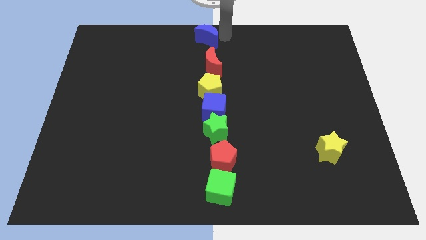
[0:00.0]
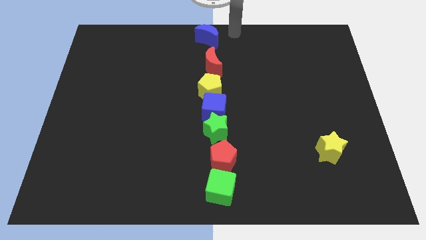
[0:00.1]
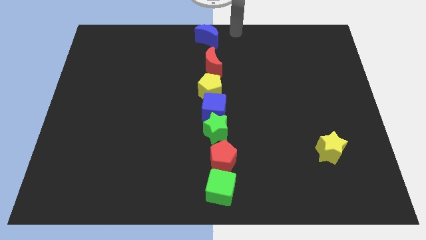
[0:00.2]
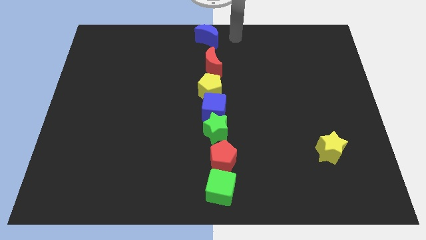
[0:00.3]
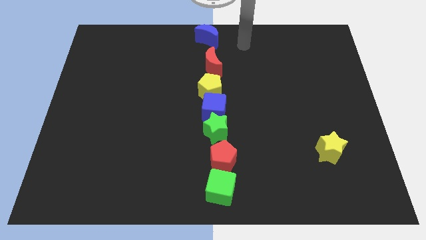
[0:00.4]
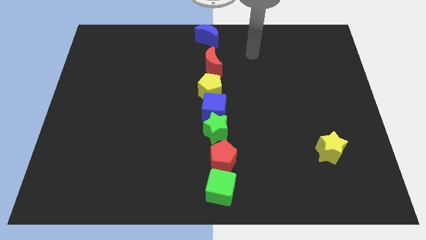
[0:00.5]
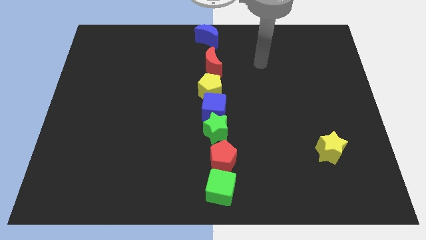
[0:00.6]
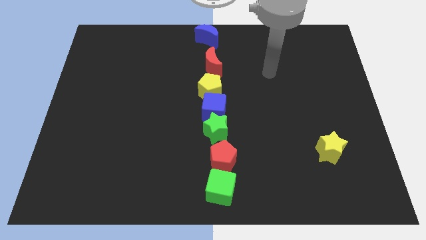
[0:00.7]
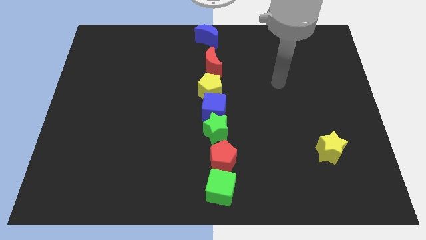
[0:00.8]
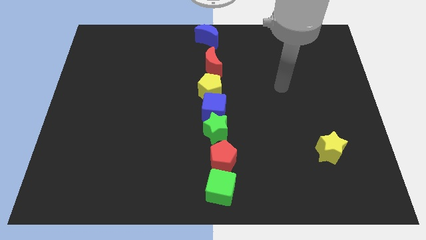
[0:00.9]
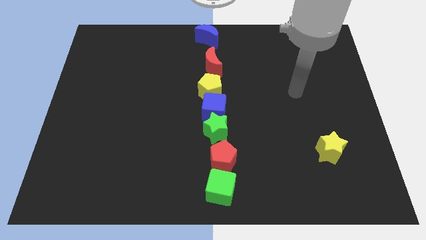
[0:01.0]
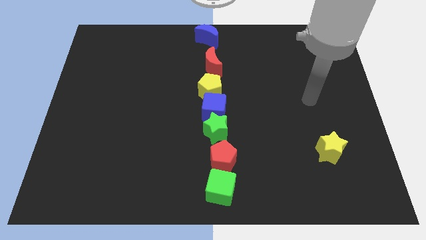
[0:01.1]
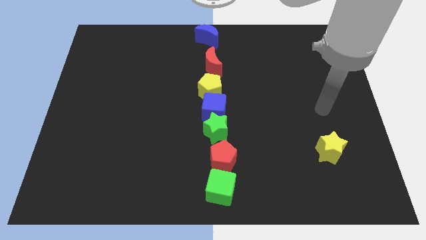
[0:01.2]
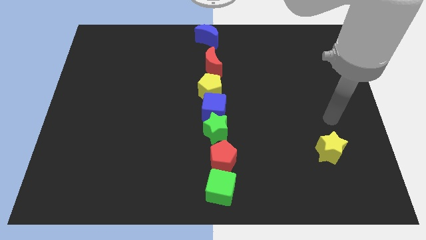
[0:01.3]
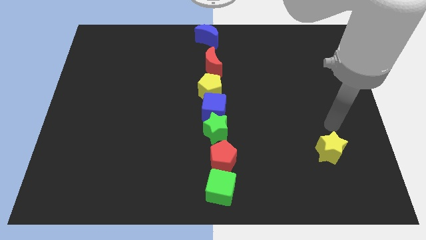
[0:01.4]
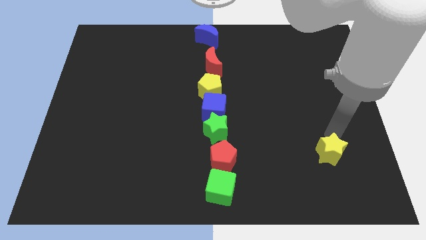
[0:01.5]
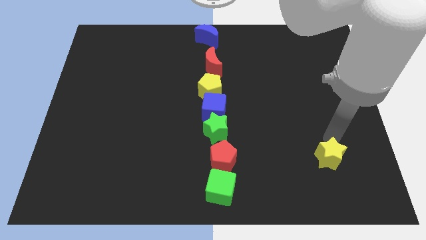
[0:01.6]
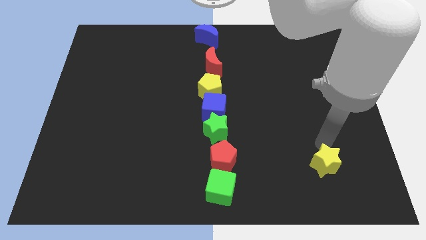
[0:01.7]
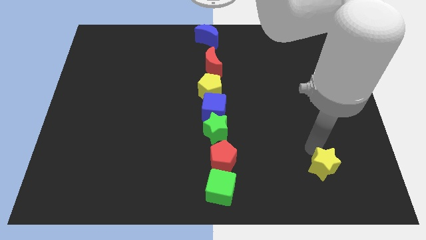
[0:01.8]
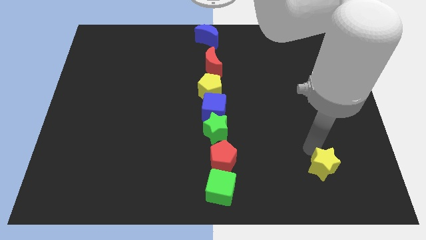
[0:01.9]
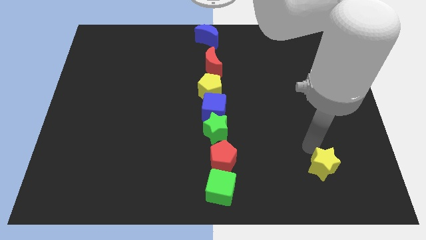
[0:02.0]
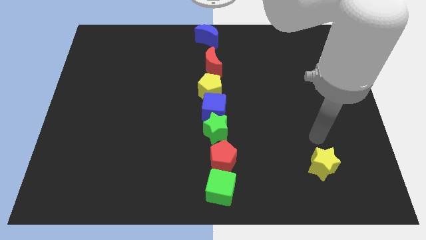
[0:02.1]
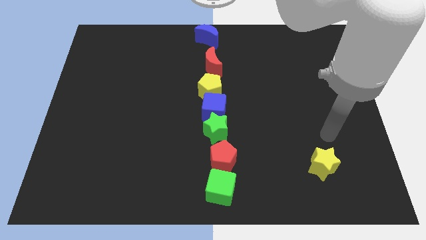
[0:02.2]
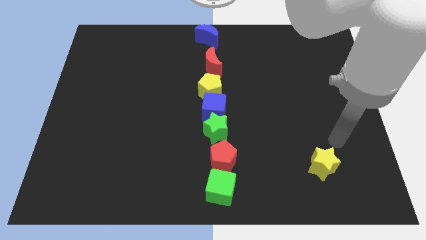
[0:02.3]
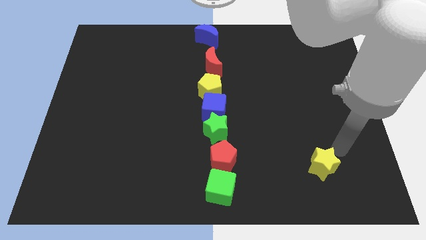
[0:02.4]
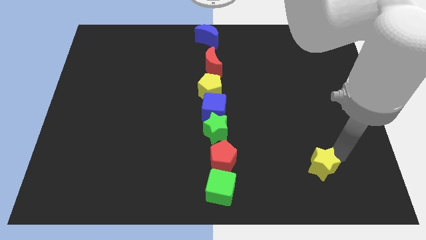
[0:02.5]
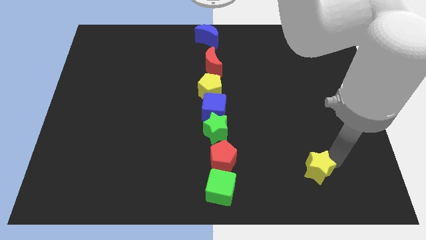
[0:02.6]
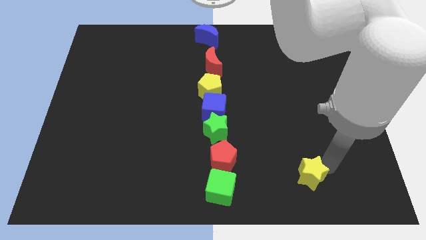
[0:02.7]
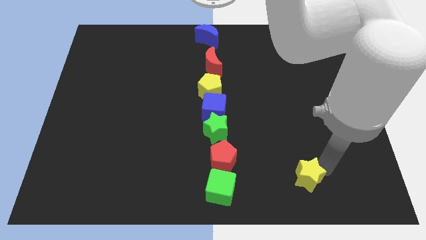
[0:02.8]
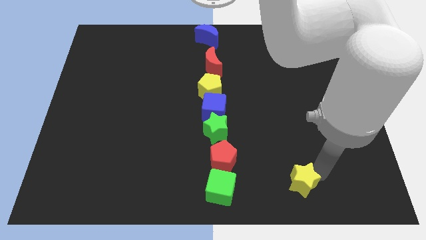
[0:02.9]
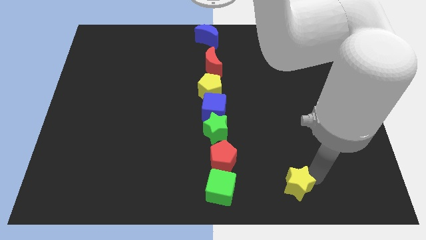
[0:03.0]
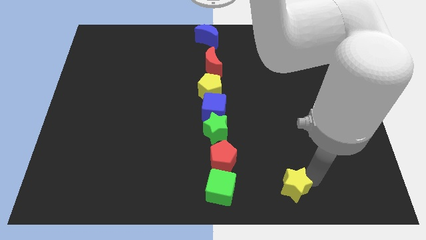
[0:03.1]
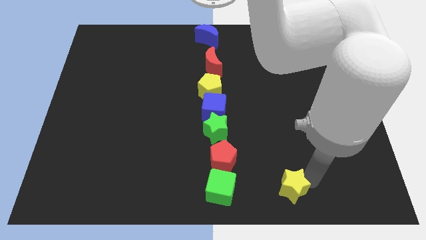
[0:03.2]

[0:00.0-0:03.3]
push yellow star towards bottom center of the board

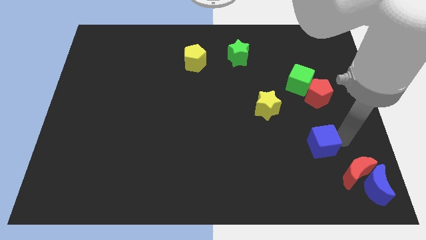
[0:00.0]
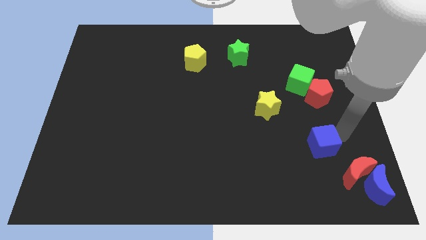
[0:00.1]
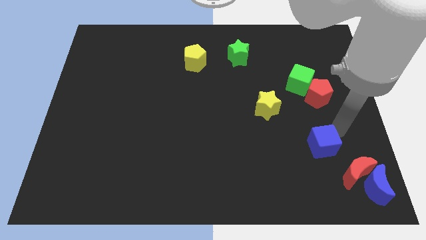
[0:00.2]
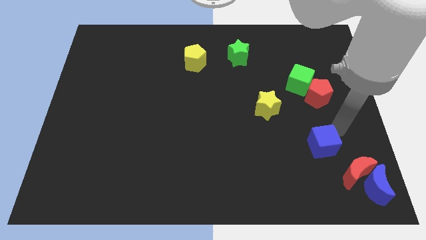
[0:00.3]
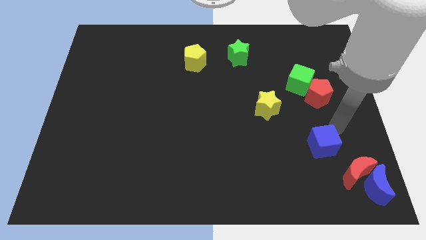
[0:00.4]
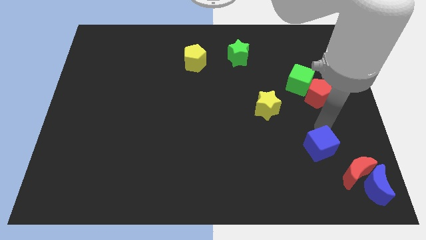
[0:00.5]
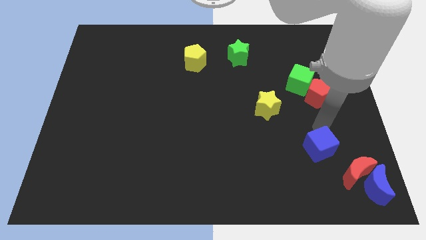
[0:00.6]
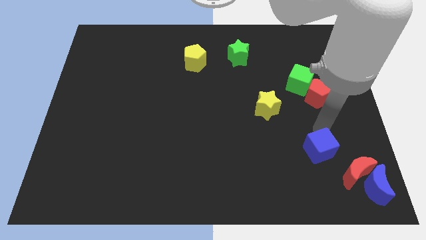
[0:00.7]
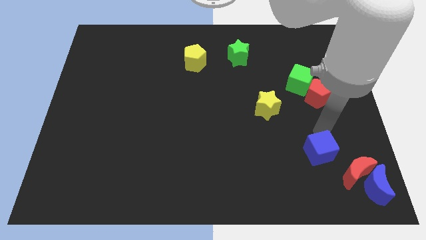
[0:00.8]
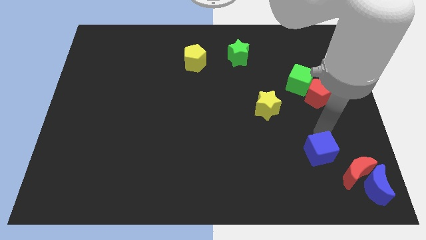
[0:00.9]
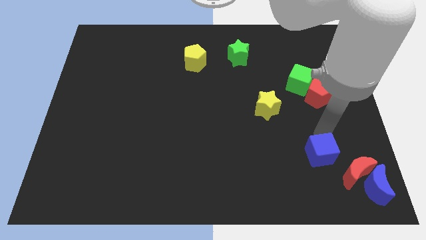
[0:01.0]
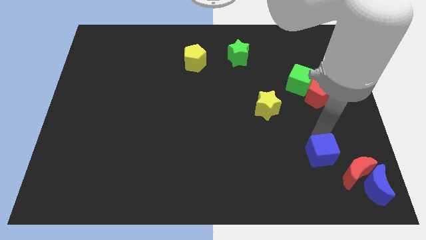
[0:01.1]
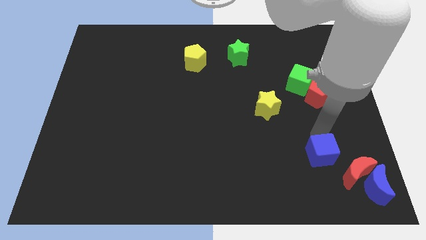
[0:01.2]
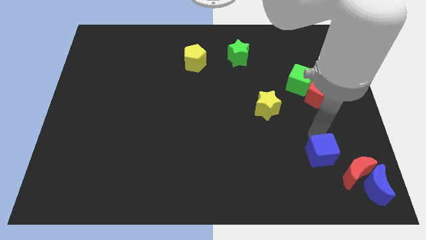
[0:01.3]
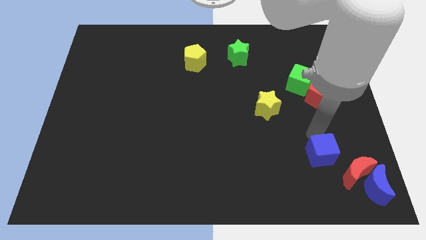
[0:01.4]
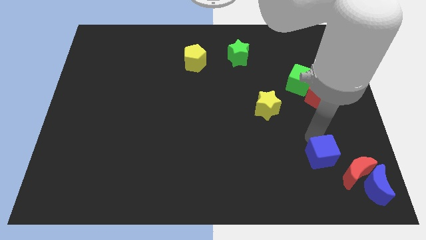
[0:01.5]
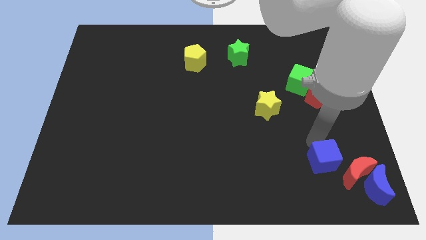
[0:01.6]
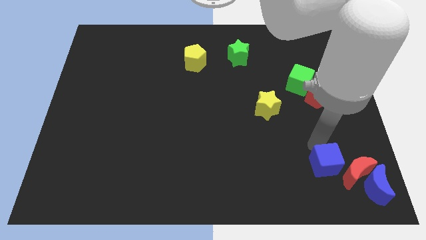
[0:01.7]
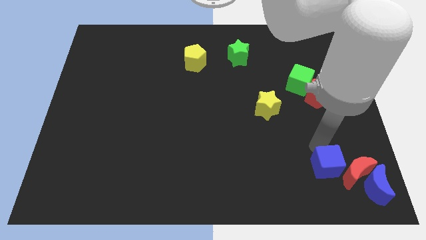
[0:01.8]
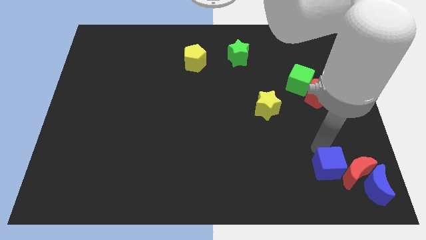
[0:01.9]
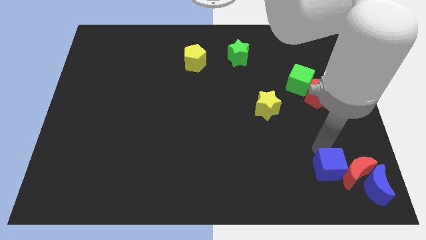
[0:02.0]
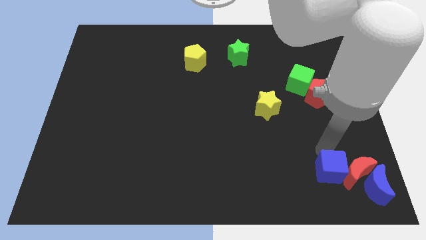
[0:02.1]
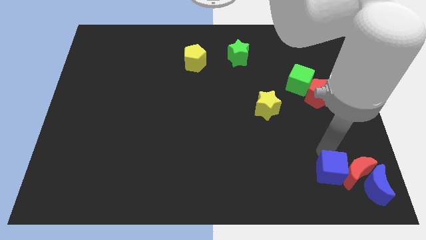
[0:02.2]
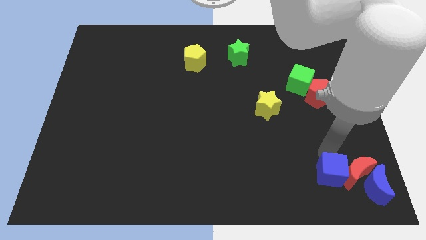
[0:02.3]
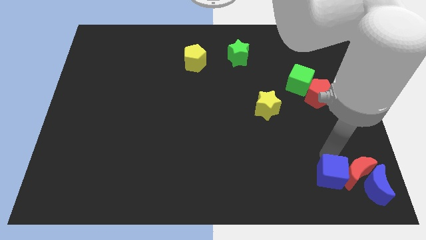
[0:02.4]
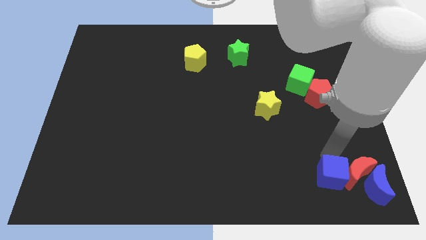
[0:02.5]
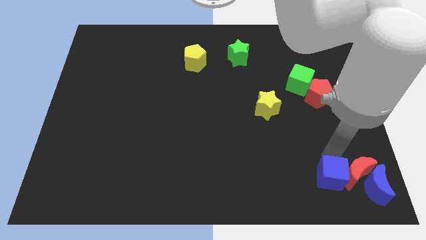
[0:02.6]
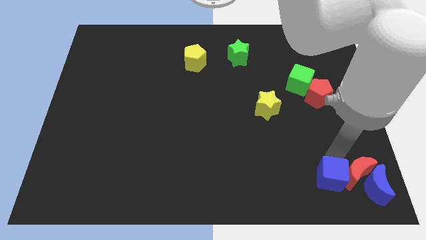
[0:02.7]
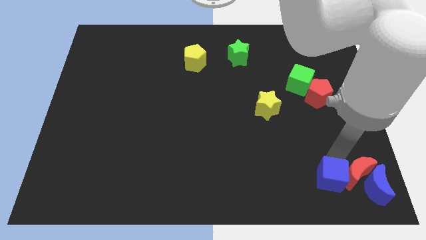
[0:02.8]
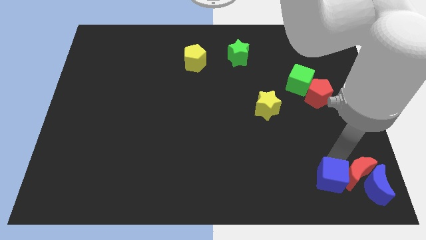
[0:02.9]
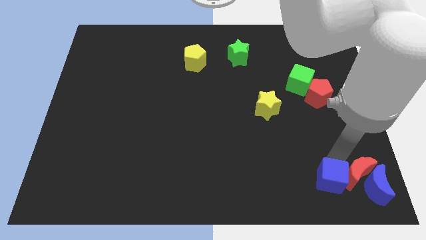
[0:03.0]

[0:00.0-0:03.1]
place blue cube to the left of red moon

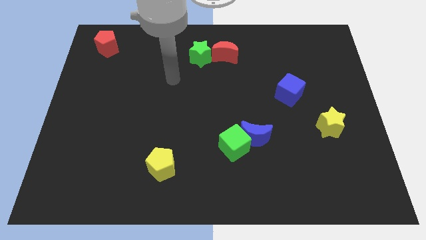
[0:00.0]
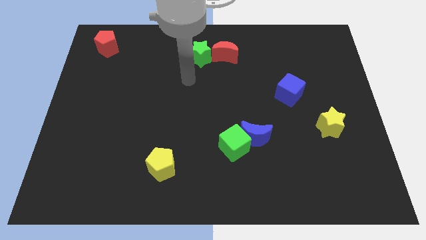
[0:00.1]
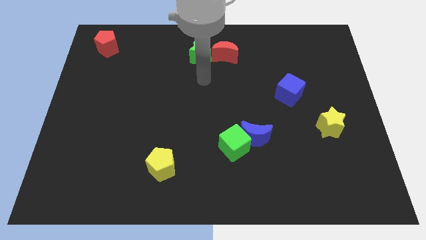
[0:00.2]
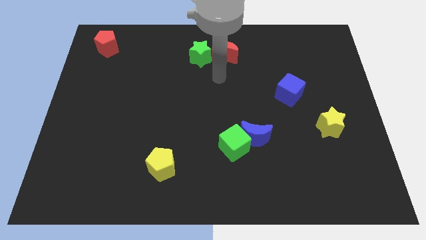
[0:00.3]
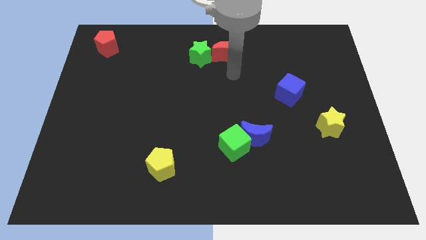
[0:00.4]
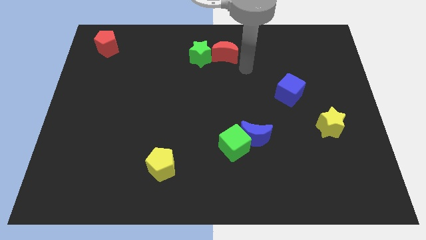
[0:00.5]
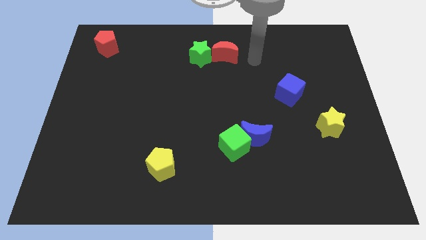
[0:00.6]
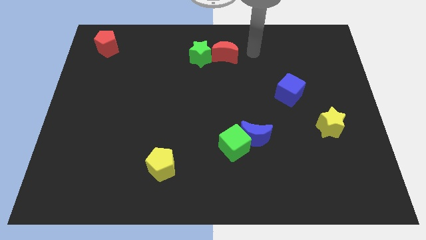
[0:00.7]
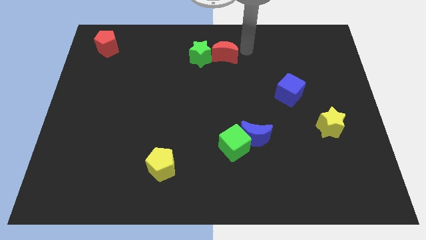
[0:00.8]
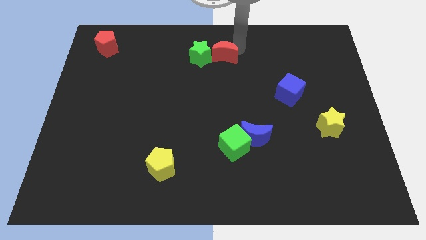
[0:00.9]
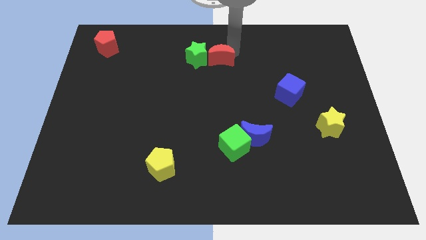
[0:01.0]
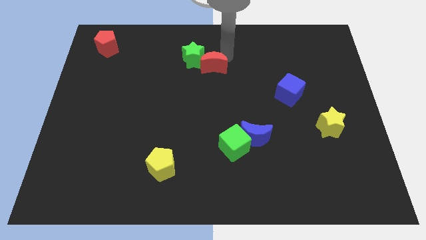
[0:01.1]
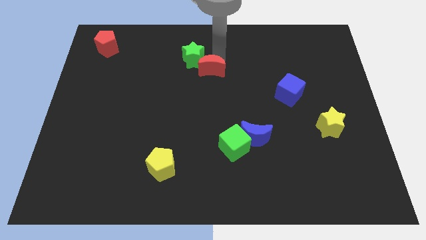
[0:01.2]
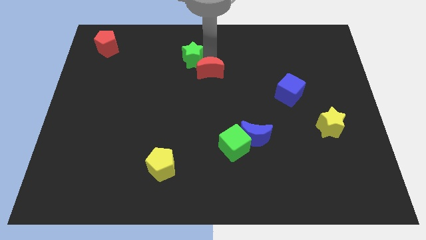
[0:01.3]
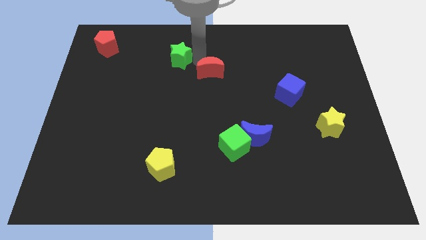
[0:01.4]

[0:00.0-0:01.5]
separate the red crescent and green star

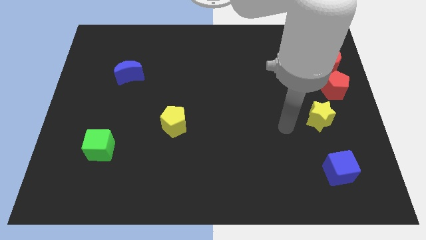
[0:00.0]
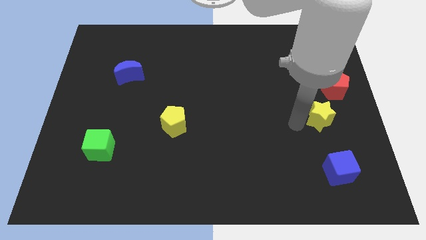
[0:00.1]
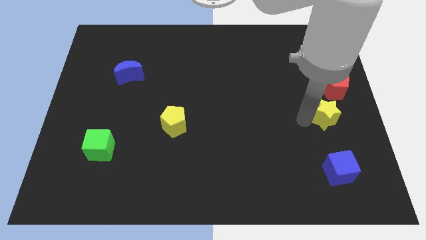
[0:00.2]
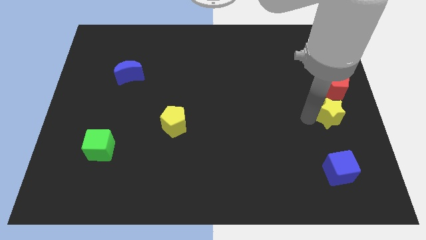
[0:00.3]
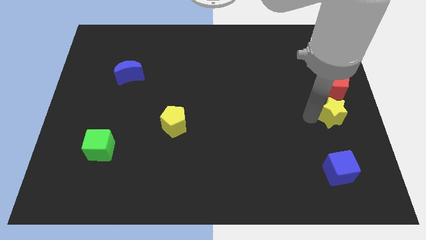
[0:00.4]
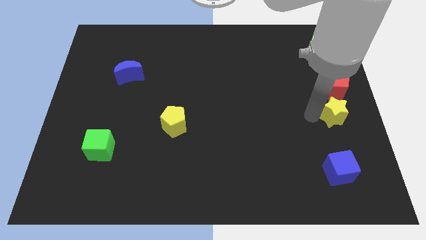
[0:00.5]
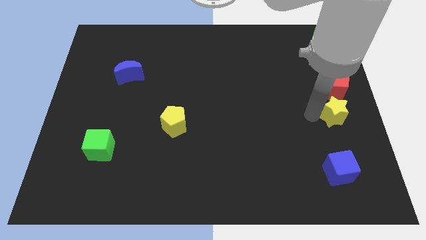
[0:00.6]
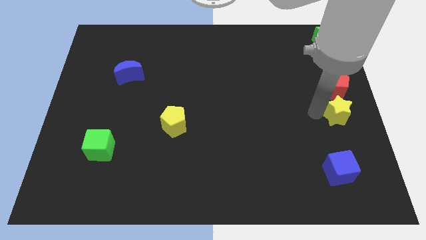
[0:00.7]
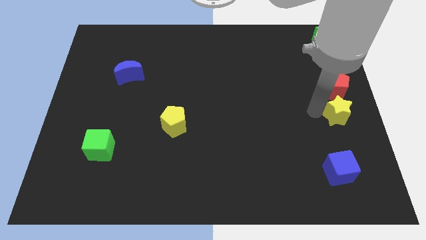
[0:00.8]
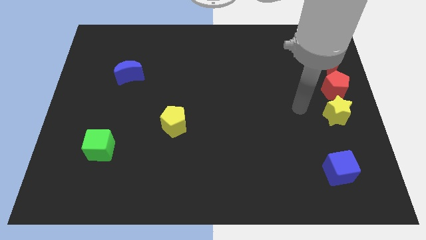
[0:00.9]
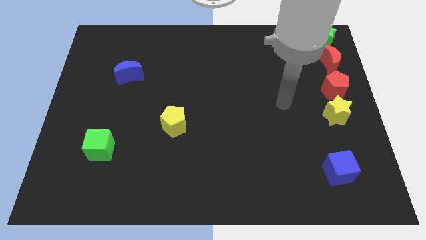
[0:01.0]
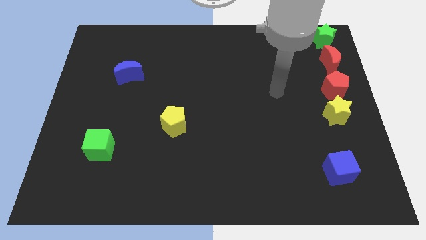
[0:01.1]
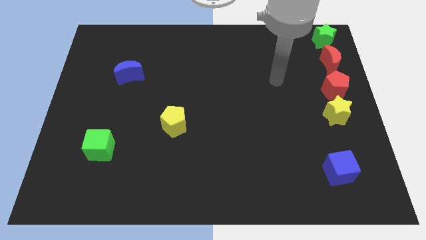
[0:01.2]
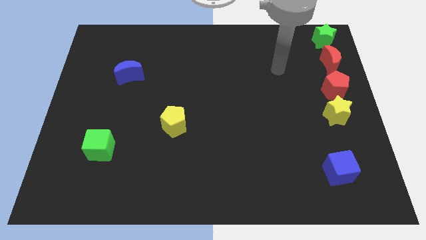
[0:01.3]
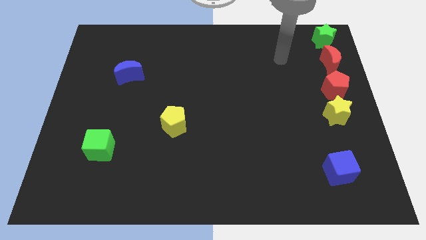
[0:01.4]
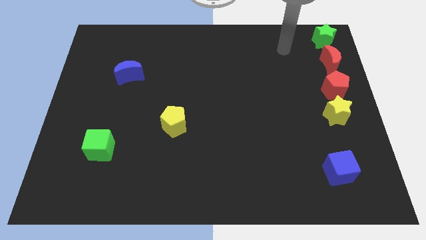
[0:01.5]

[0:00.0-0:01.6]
place the yellow star under the red pentagon
